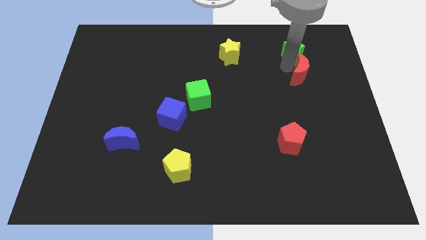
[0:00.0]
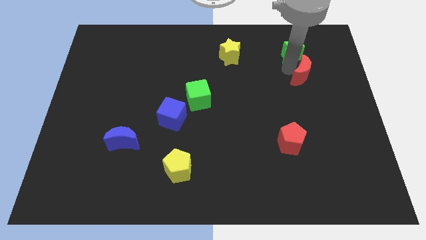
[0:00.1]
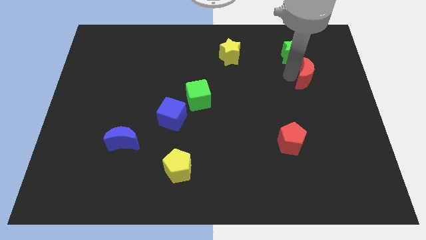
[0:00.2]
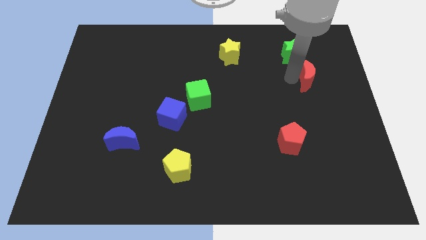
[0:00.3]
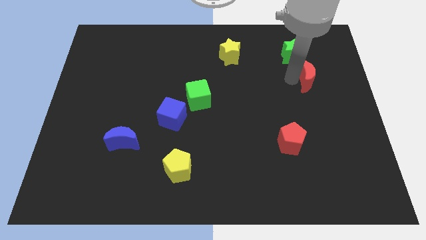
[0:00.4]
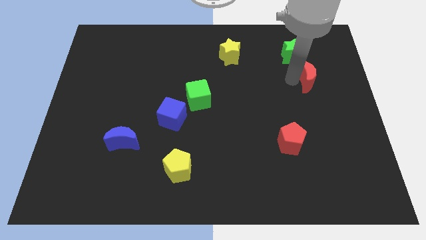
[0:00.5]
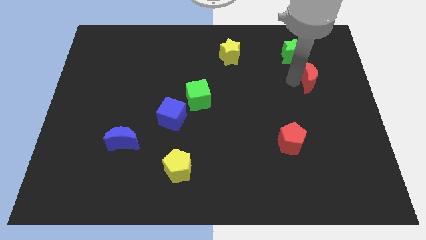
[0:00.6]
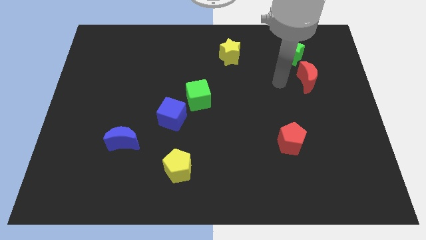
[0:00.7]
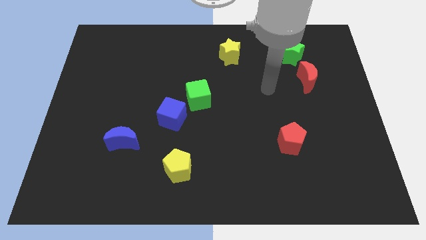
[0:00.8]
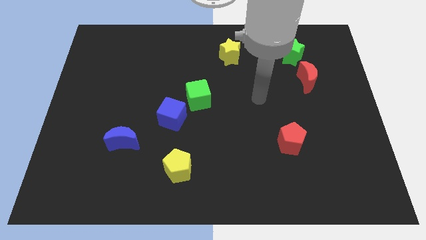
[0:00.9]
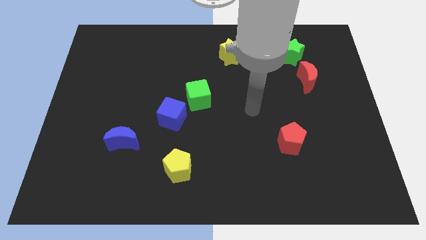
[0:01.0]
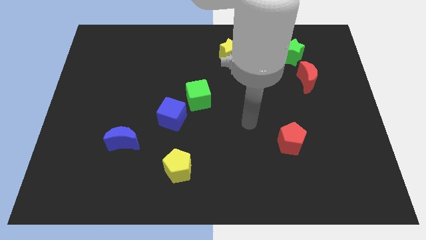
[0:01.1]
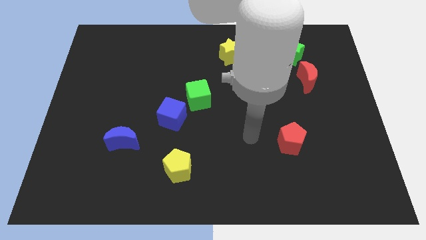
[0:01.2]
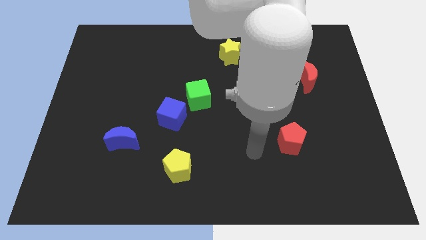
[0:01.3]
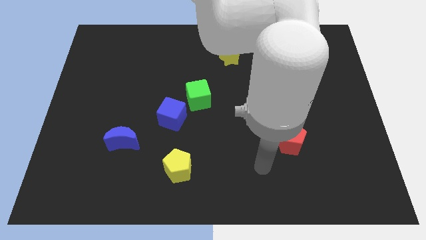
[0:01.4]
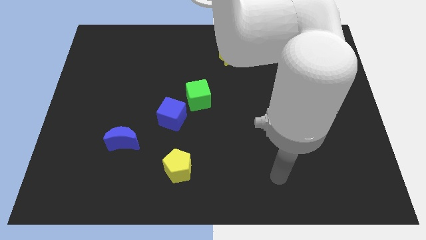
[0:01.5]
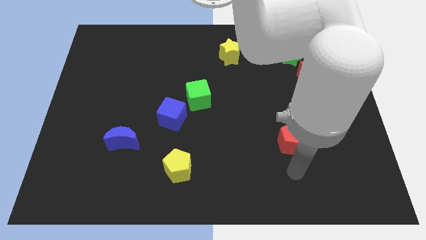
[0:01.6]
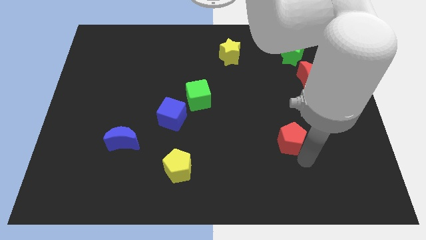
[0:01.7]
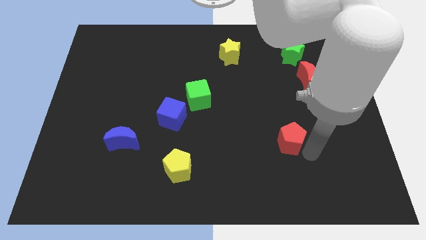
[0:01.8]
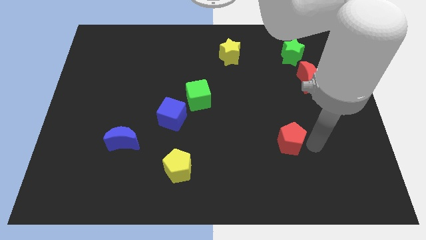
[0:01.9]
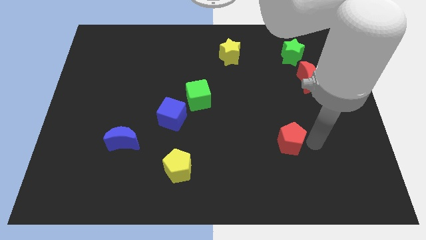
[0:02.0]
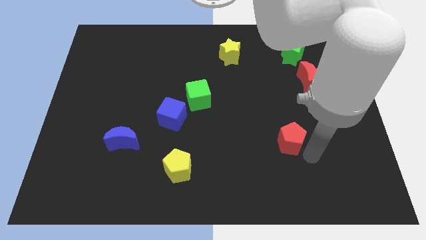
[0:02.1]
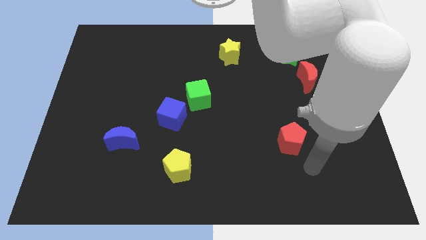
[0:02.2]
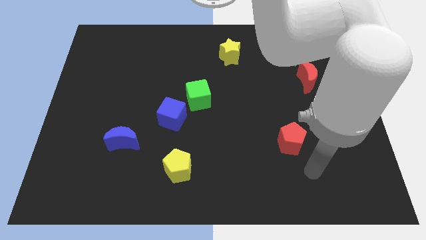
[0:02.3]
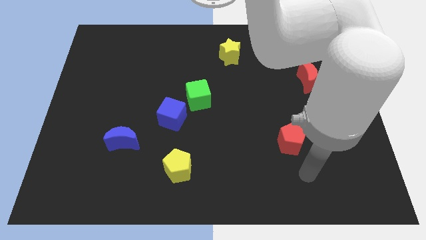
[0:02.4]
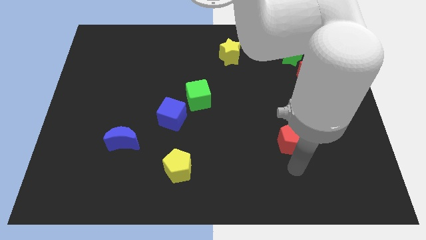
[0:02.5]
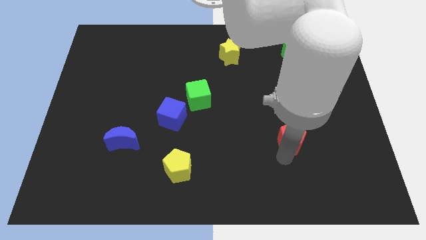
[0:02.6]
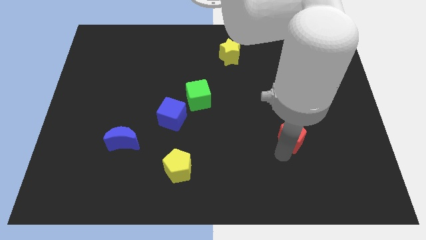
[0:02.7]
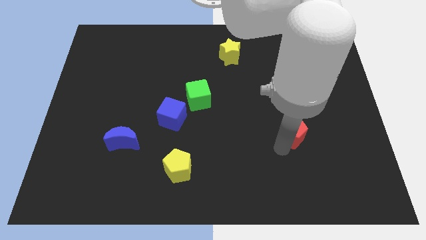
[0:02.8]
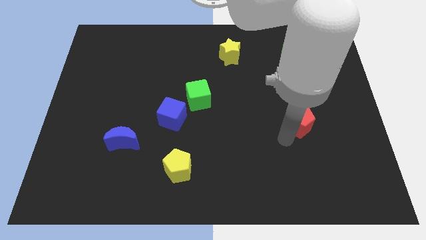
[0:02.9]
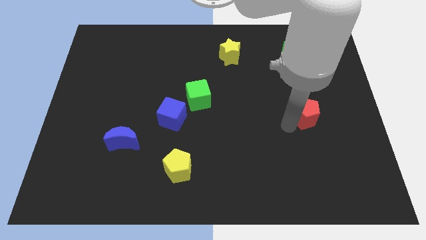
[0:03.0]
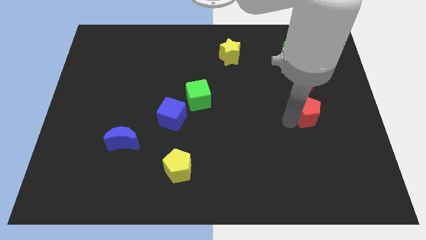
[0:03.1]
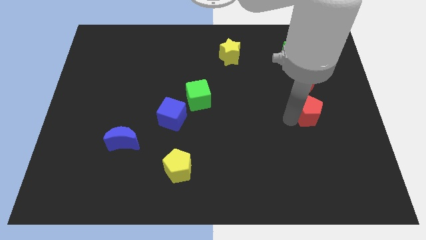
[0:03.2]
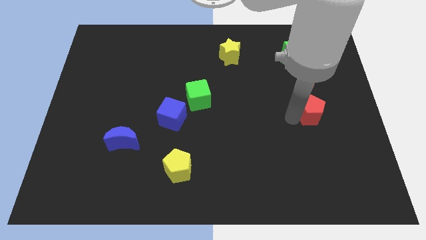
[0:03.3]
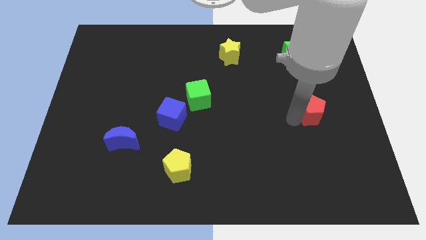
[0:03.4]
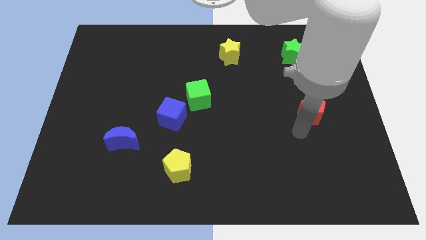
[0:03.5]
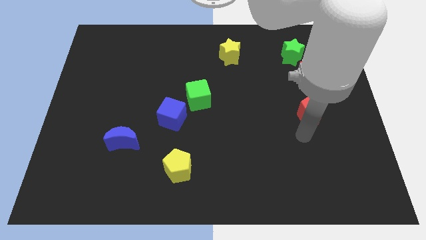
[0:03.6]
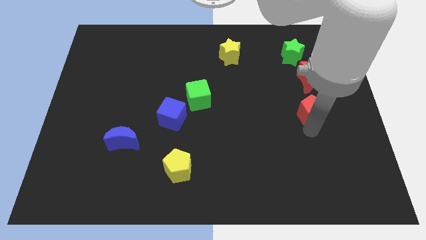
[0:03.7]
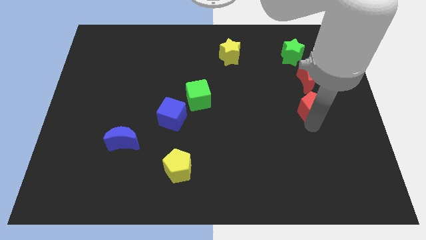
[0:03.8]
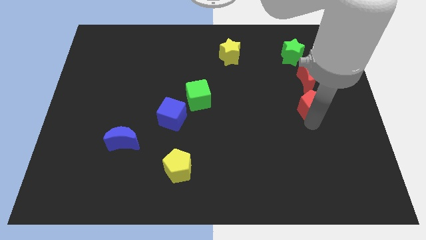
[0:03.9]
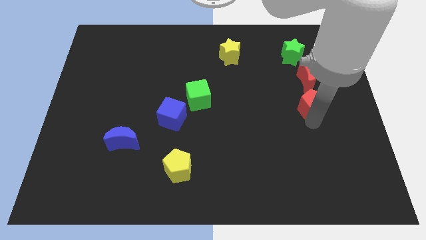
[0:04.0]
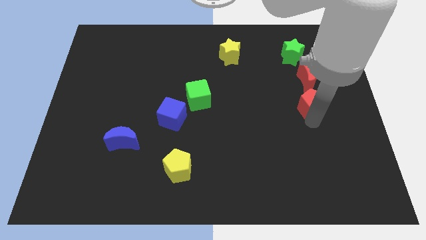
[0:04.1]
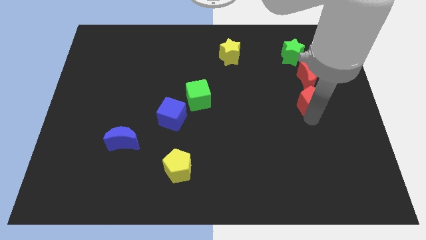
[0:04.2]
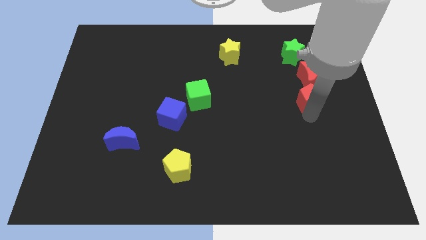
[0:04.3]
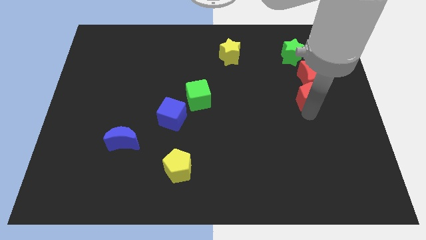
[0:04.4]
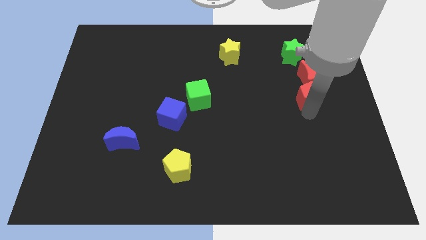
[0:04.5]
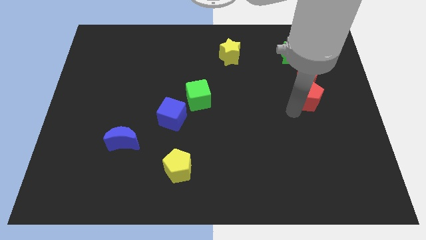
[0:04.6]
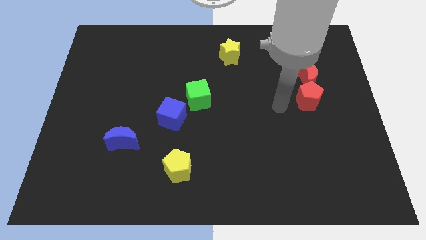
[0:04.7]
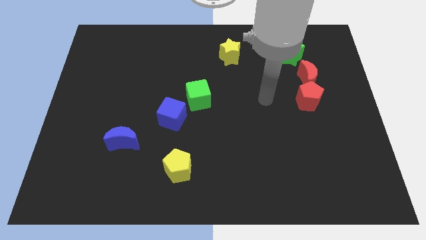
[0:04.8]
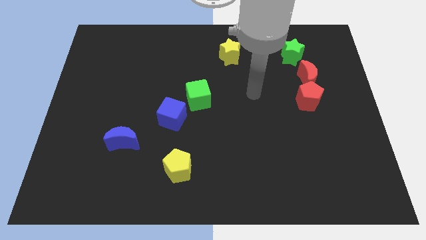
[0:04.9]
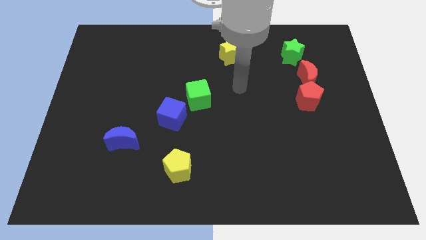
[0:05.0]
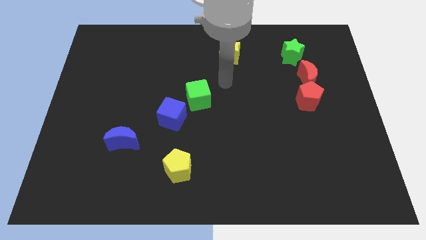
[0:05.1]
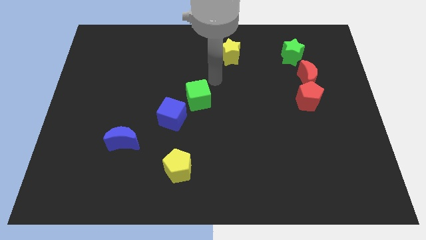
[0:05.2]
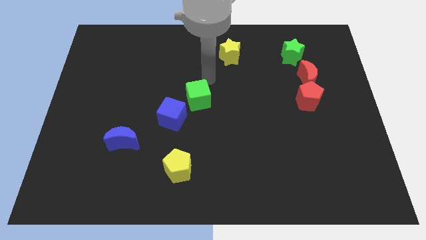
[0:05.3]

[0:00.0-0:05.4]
push the red pentagon into the red moon

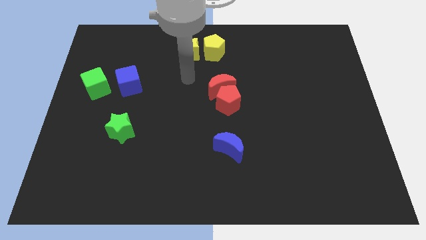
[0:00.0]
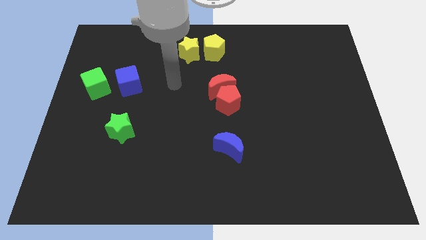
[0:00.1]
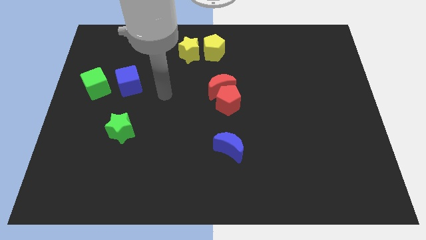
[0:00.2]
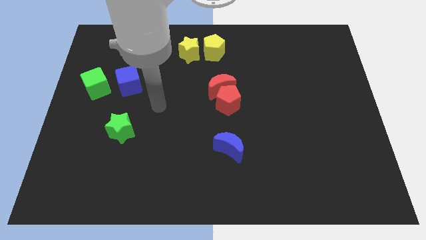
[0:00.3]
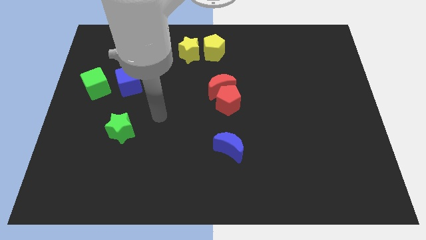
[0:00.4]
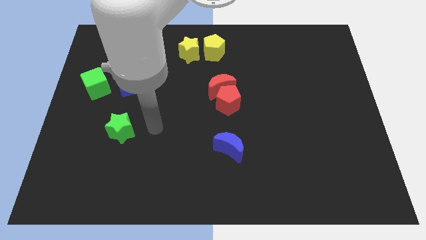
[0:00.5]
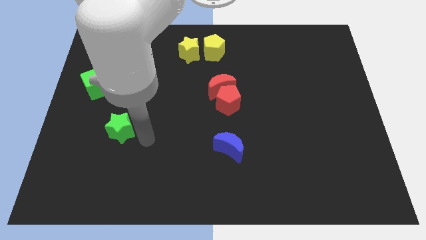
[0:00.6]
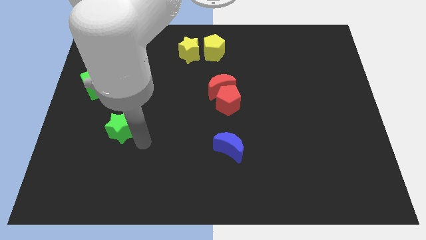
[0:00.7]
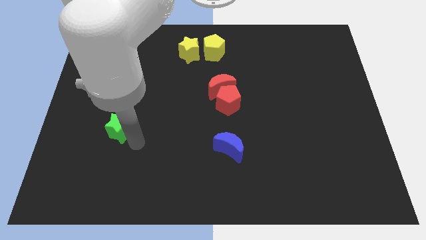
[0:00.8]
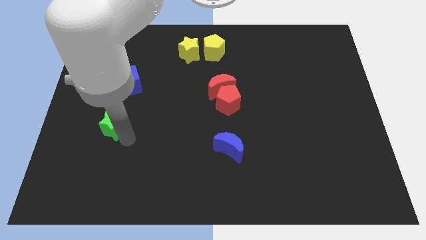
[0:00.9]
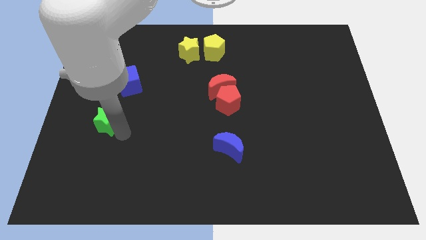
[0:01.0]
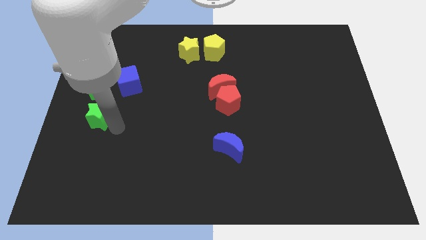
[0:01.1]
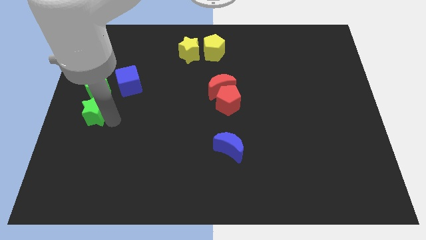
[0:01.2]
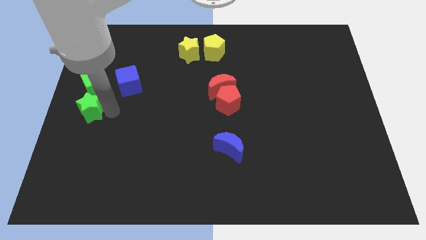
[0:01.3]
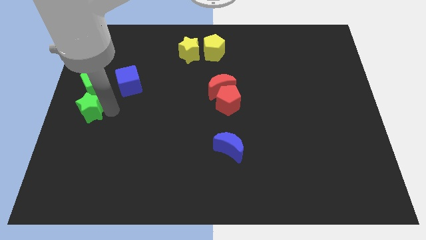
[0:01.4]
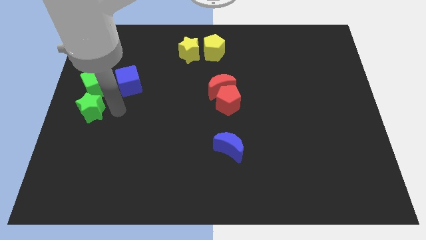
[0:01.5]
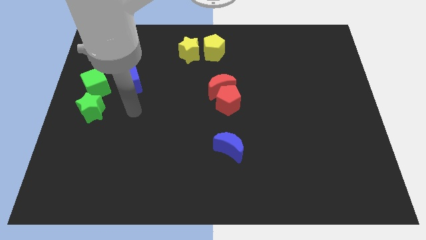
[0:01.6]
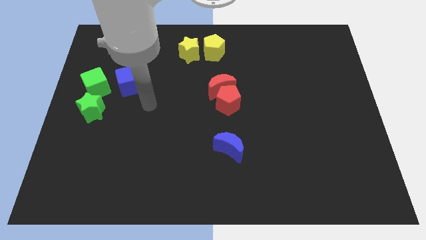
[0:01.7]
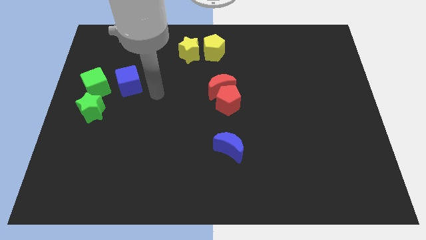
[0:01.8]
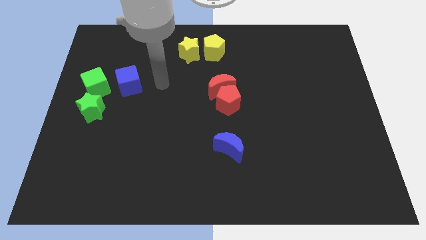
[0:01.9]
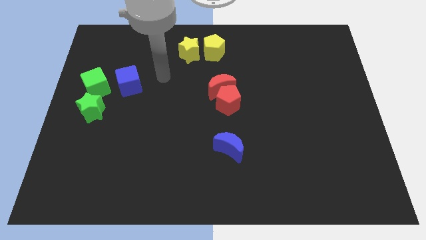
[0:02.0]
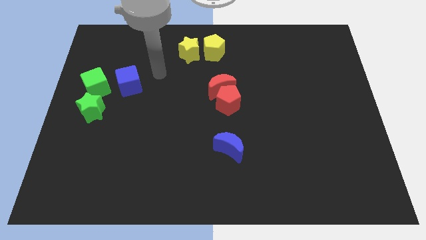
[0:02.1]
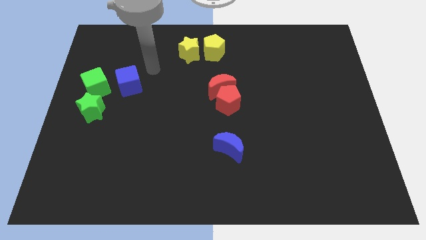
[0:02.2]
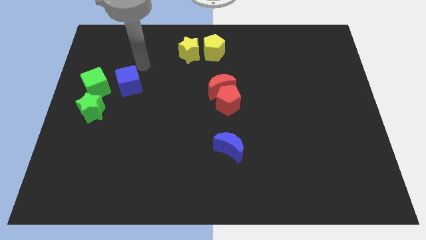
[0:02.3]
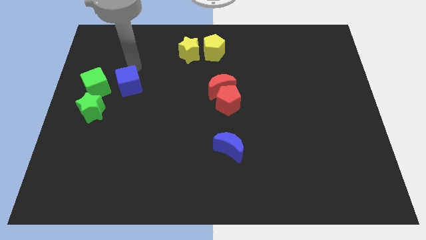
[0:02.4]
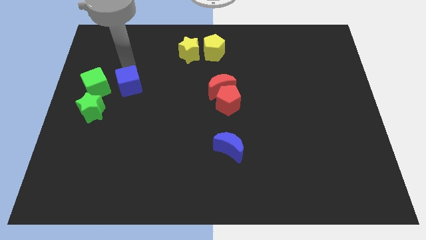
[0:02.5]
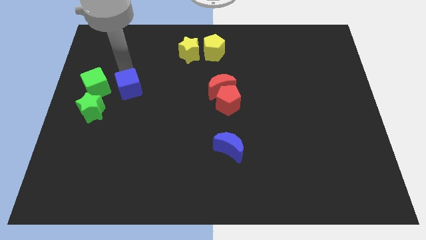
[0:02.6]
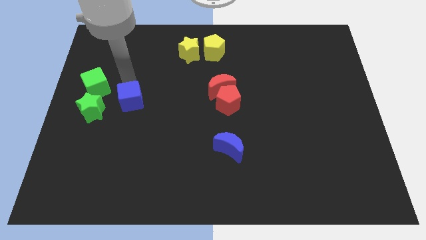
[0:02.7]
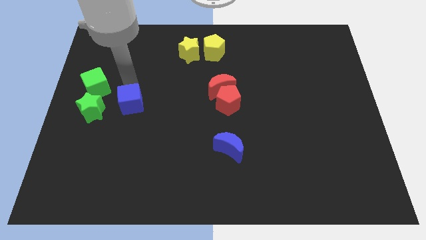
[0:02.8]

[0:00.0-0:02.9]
push blue cube to the right of the green star

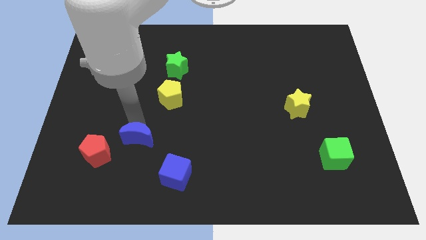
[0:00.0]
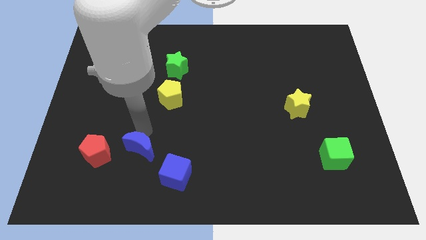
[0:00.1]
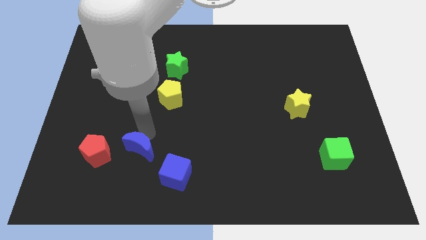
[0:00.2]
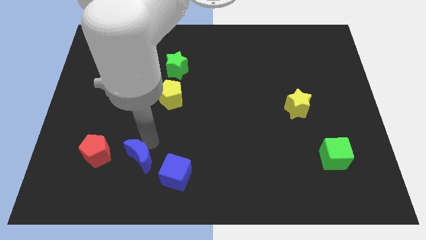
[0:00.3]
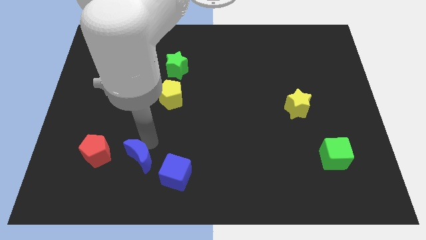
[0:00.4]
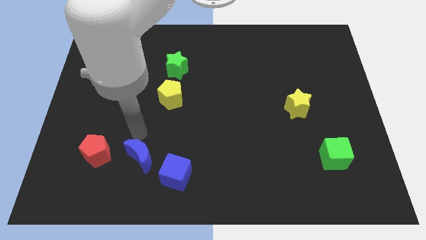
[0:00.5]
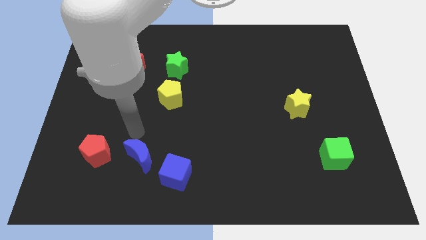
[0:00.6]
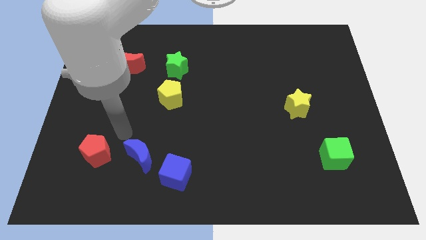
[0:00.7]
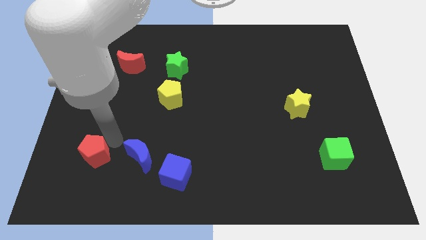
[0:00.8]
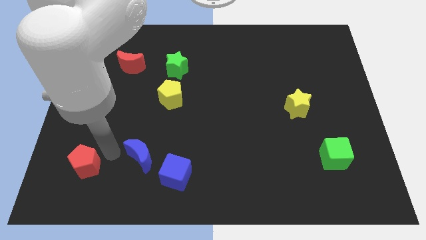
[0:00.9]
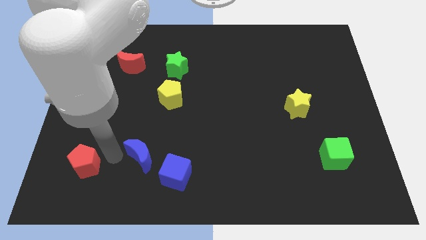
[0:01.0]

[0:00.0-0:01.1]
place your arm in between blue moon and red pentagon
